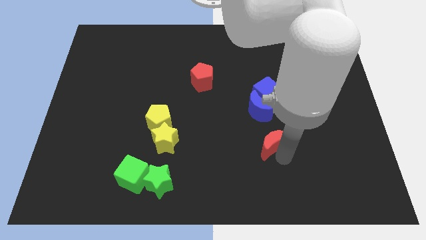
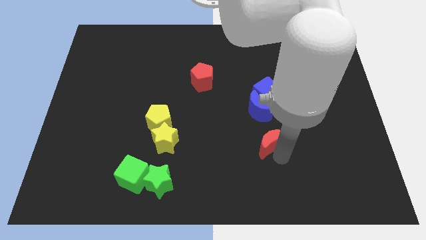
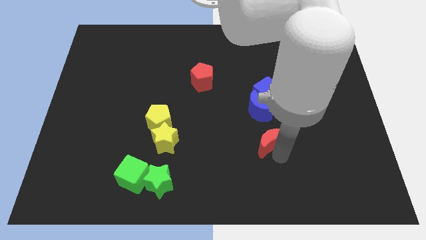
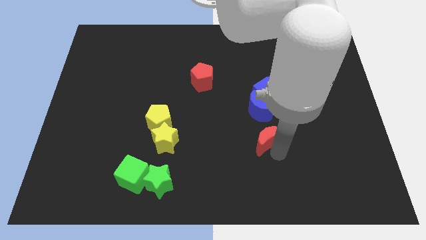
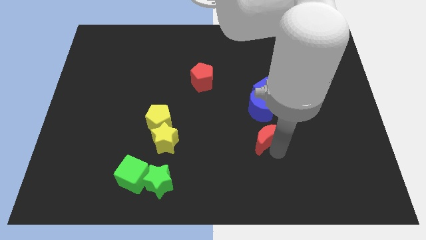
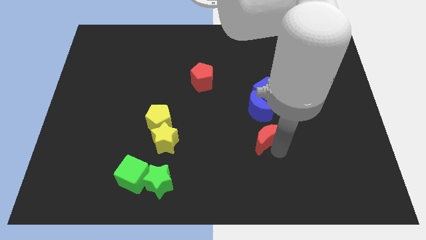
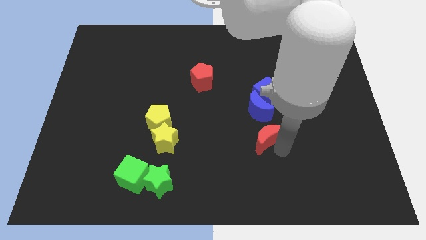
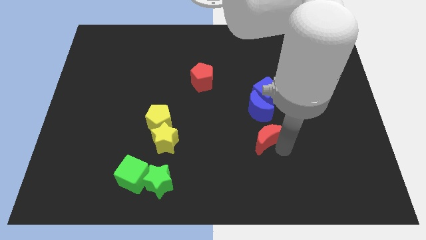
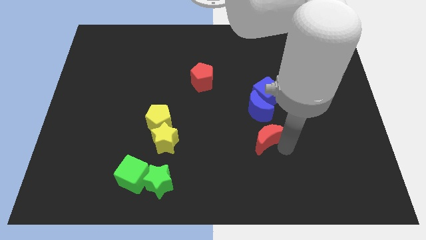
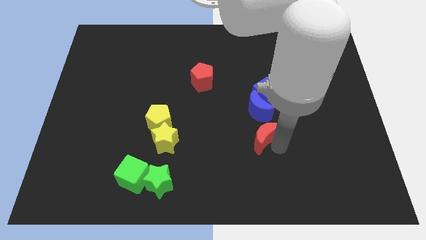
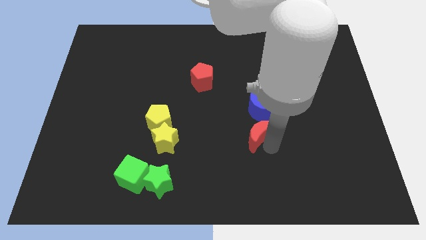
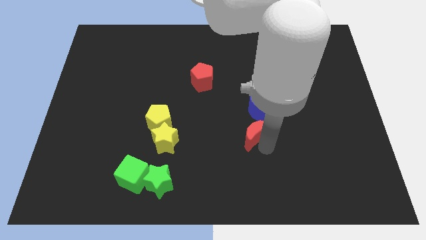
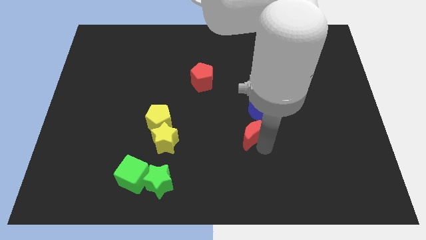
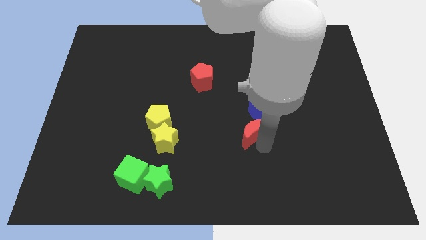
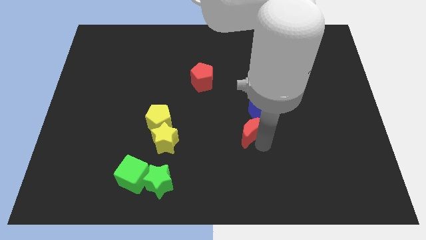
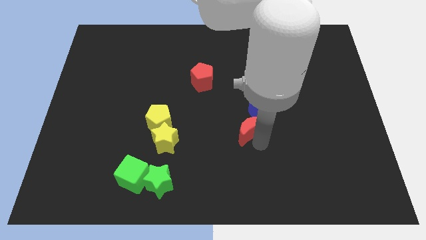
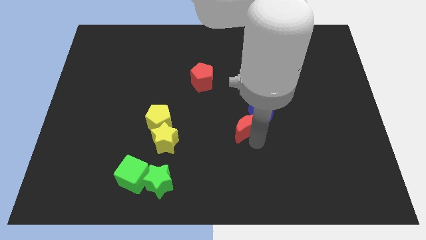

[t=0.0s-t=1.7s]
move the red crescent slightly to the center

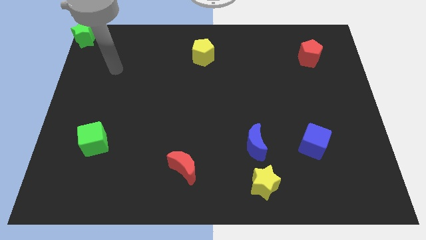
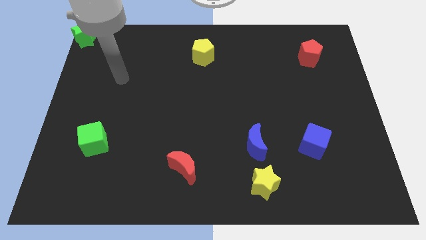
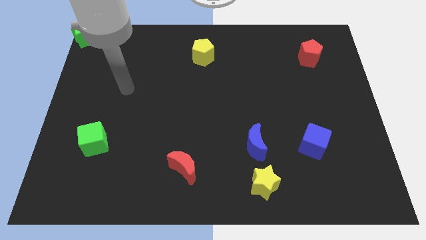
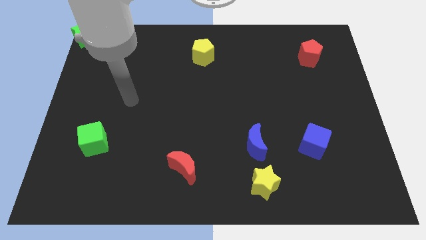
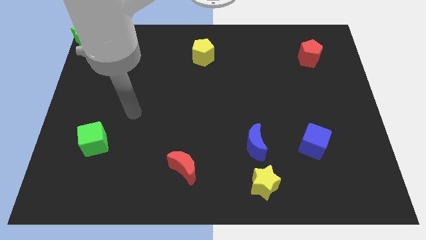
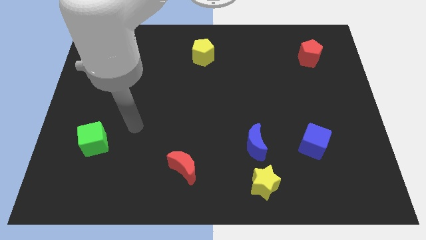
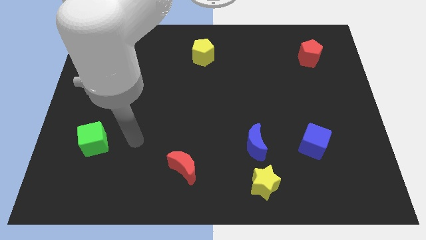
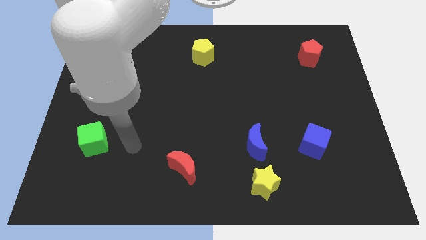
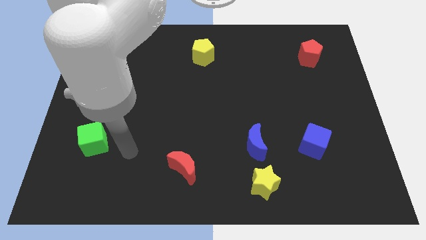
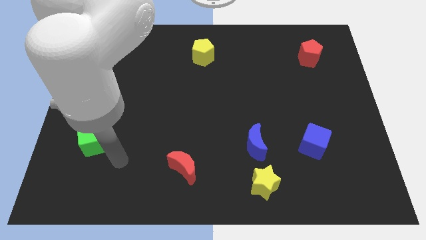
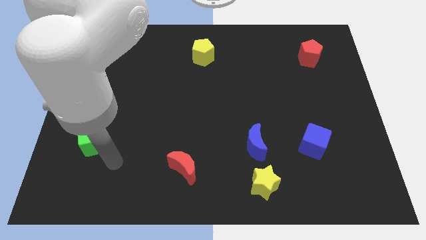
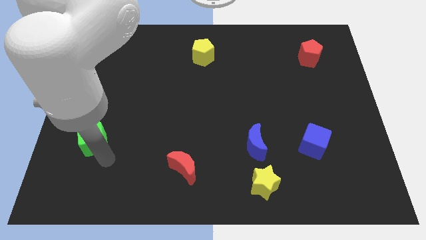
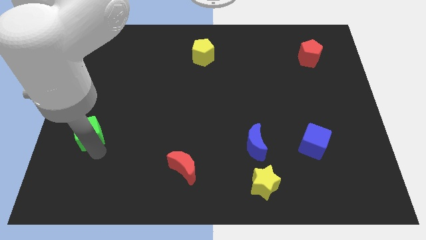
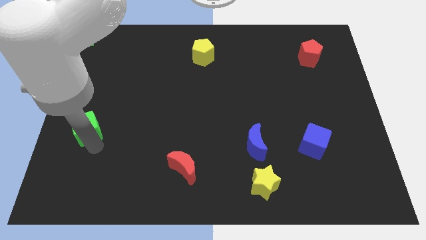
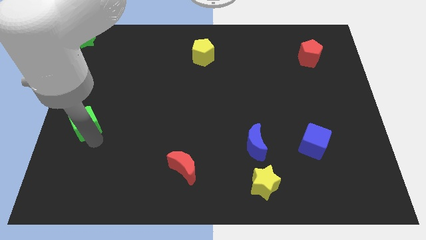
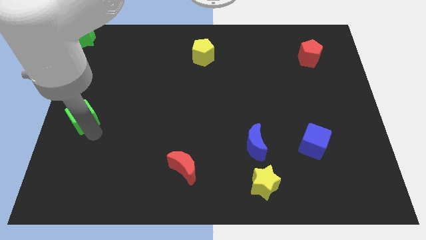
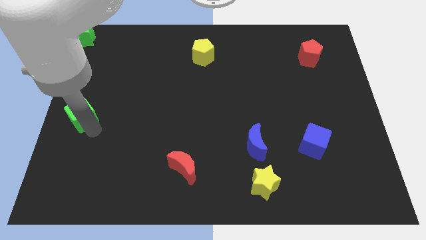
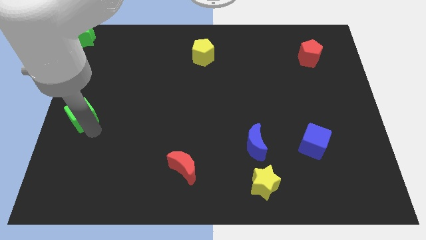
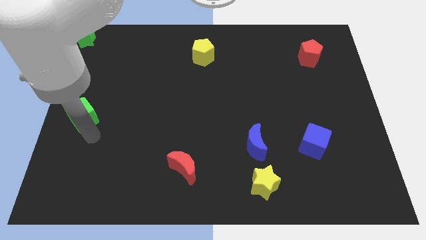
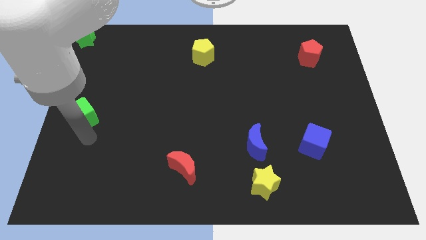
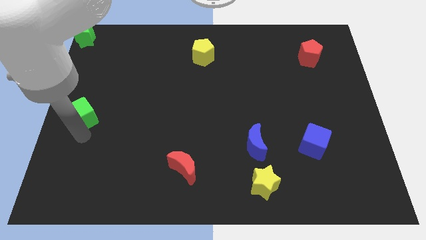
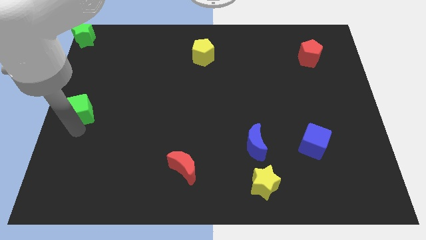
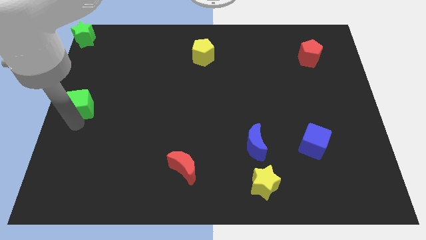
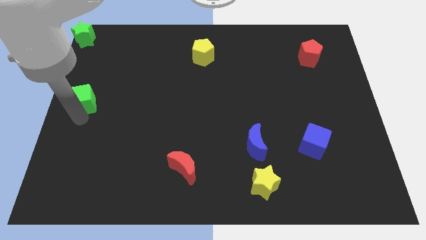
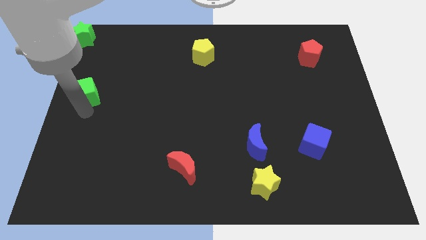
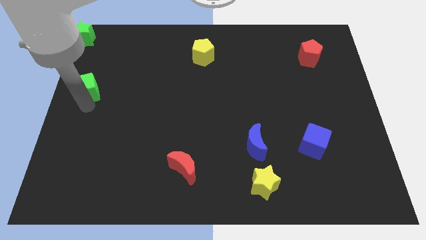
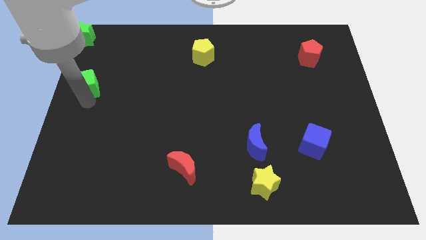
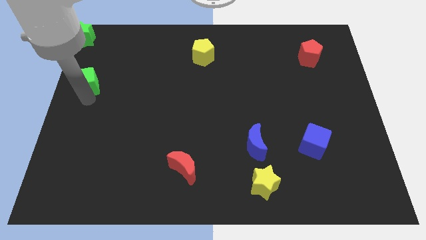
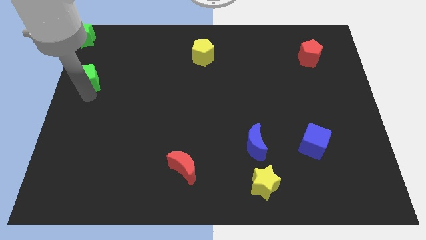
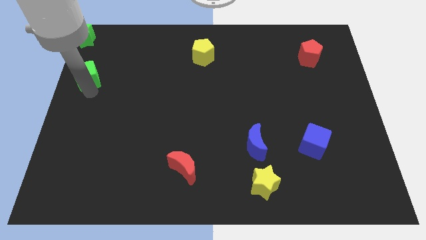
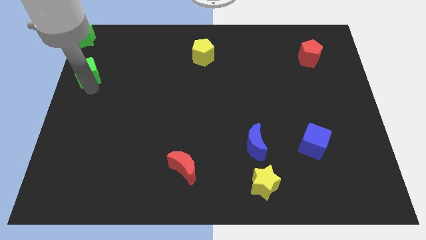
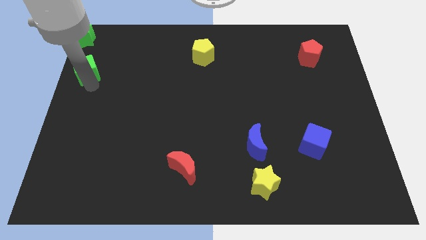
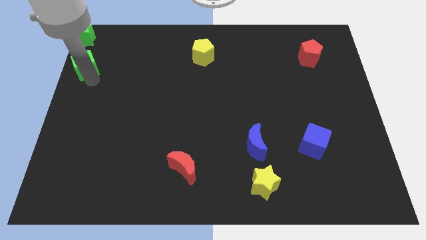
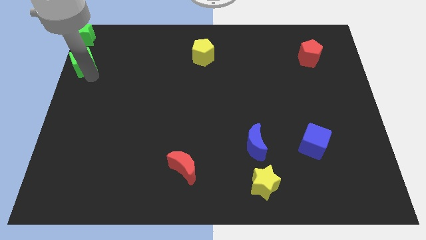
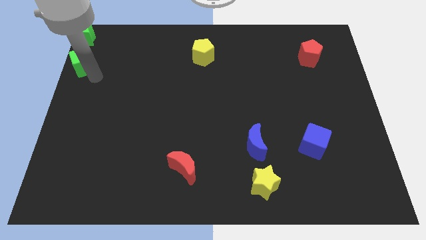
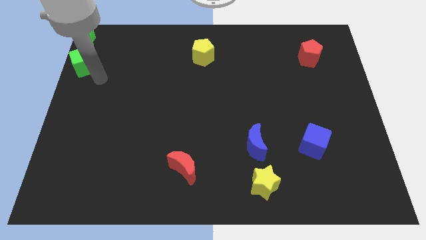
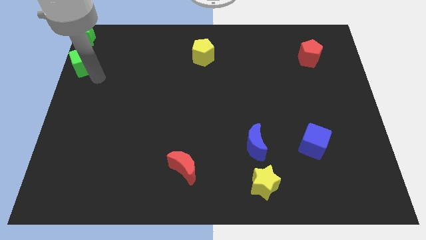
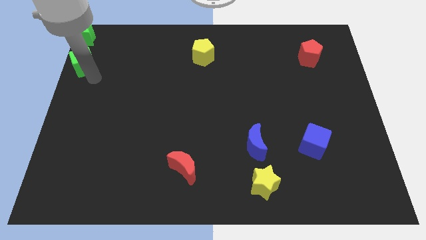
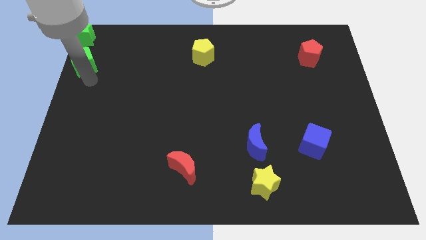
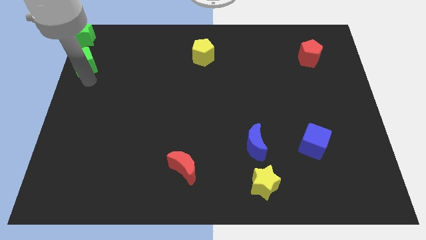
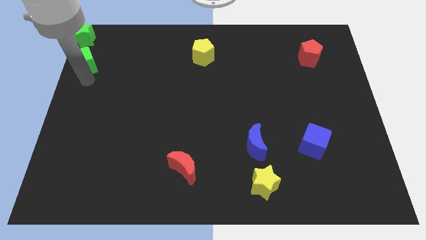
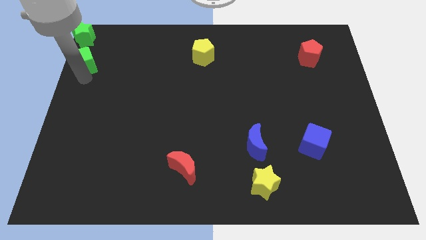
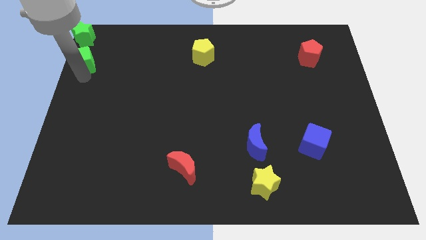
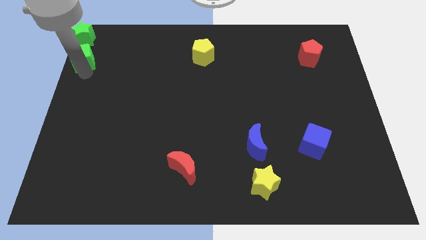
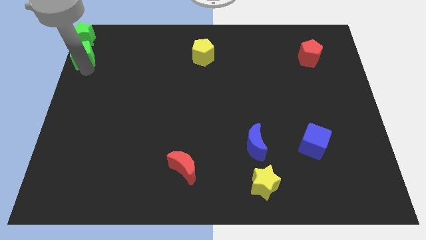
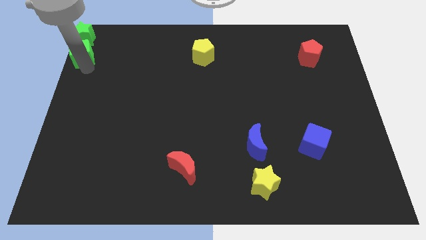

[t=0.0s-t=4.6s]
move the green cube below the green star

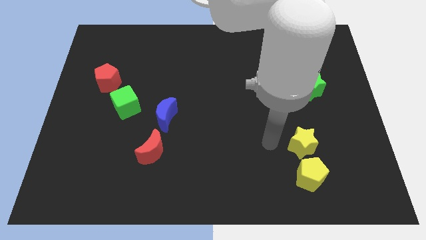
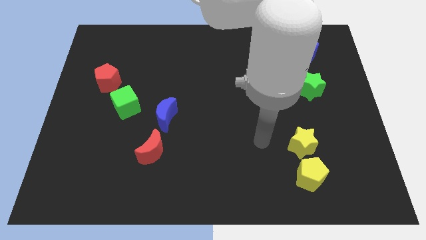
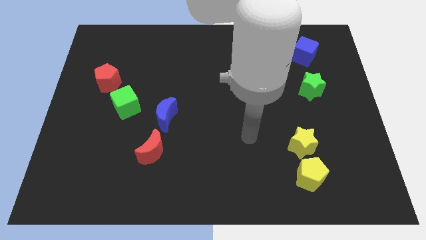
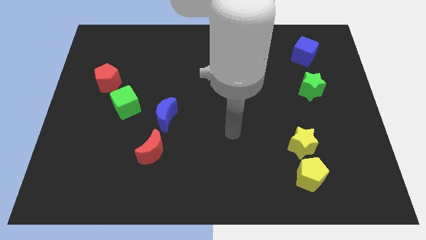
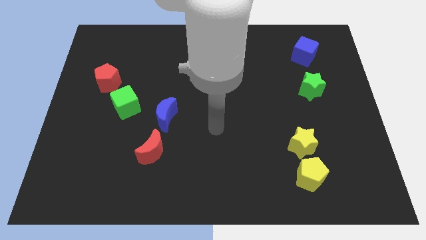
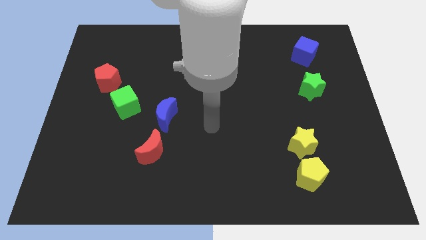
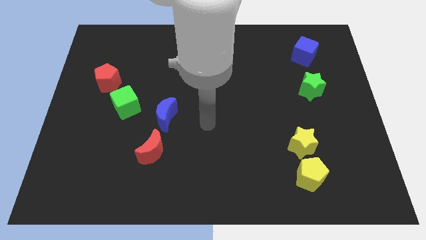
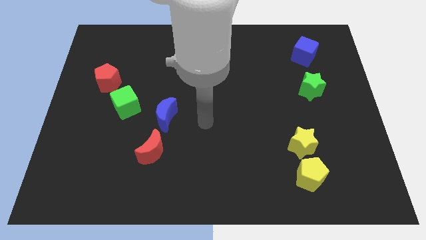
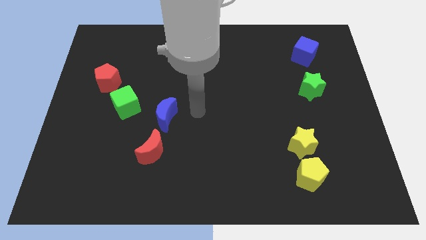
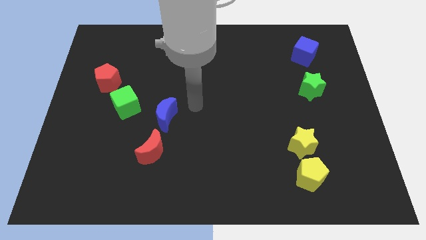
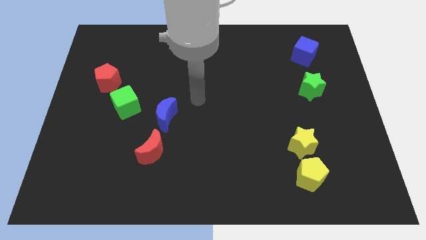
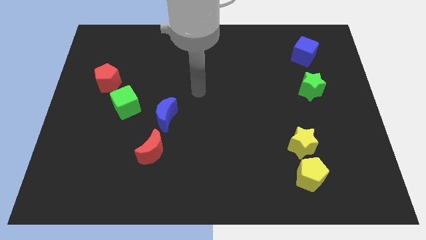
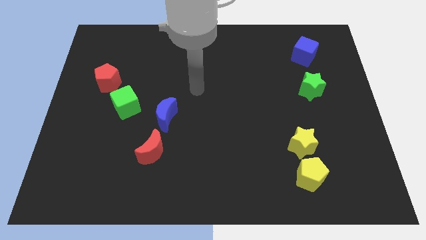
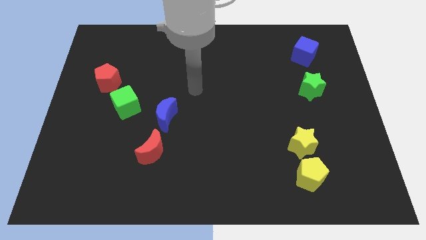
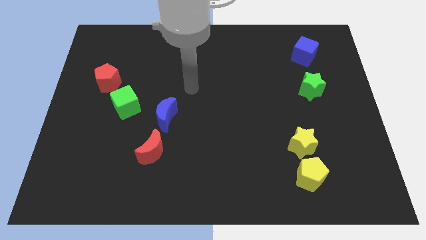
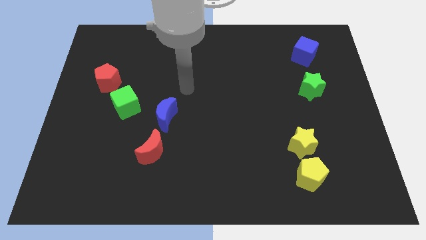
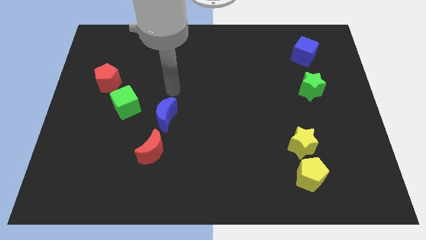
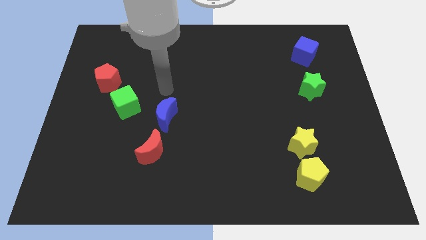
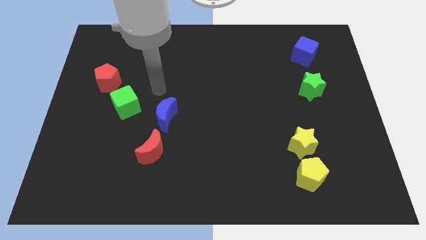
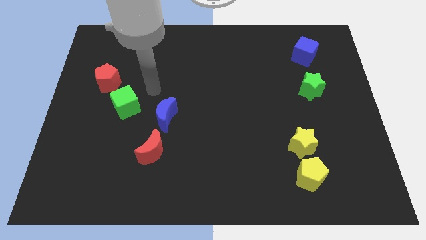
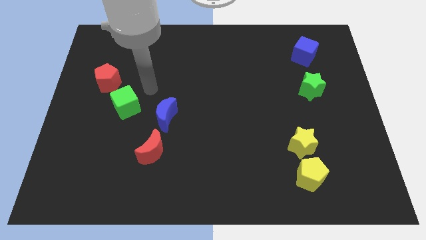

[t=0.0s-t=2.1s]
move your arm away from the yellow star

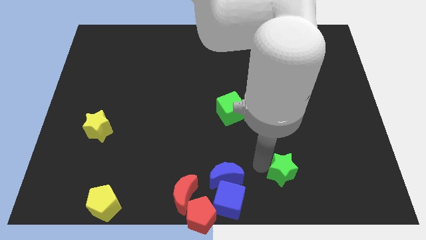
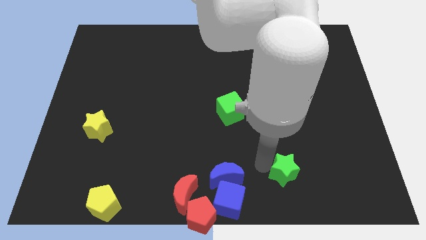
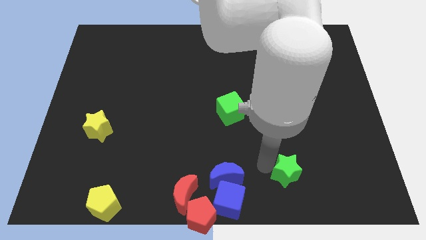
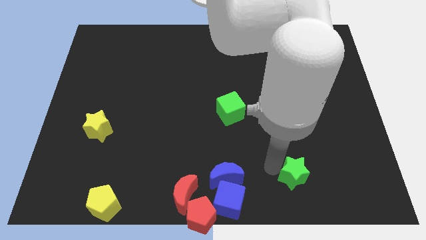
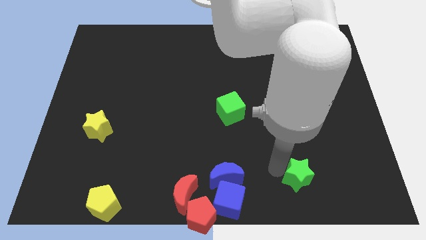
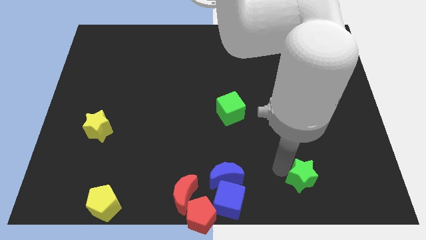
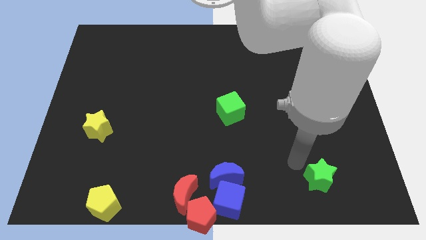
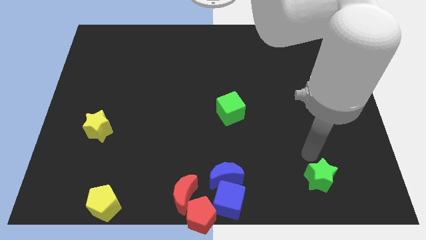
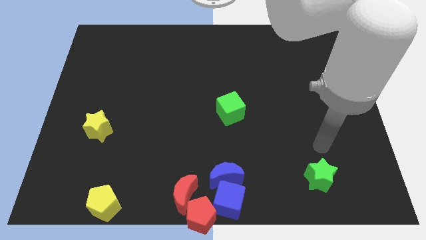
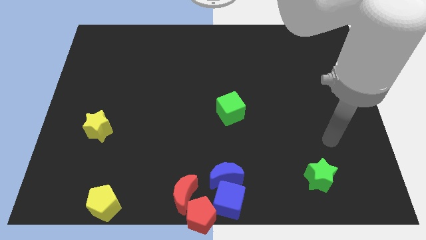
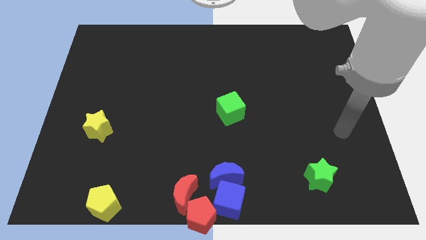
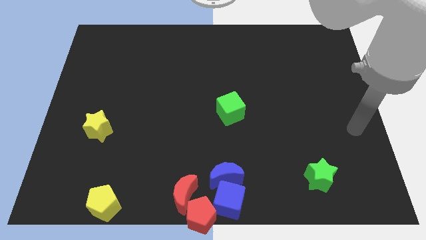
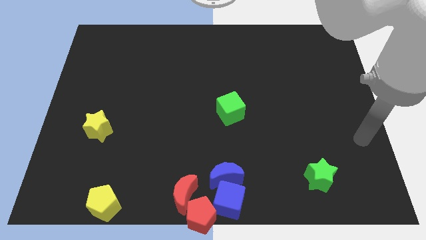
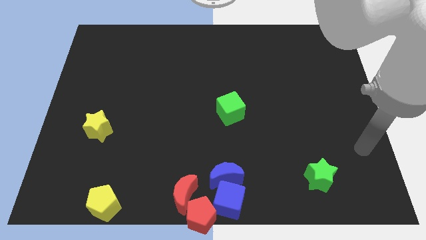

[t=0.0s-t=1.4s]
push the green star slightly to the right
